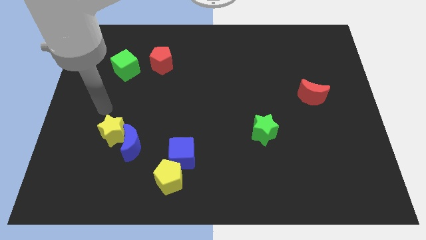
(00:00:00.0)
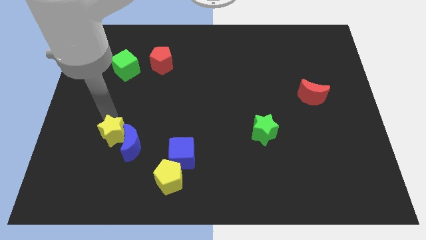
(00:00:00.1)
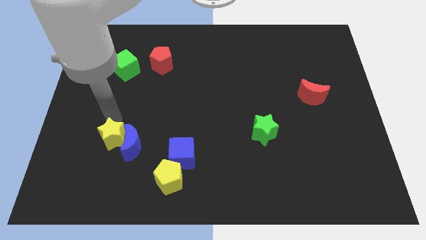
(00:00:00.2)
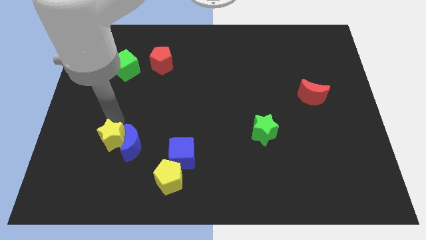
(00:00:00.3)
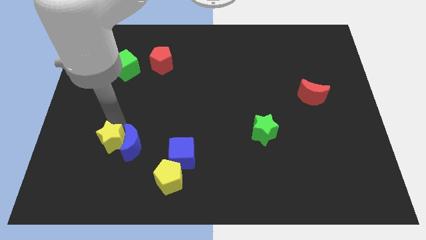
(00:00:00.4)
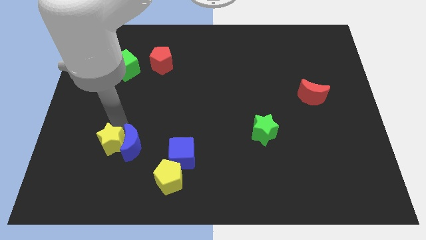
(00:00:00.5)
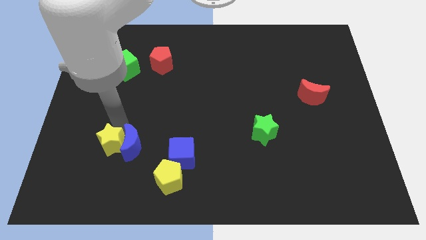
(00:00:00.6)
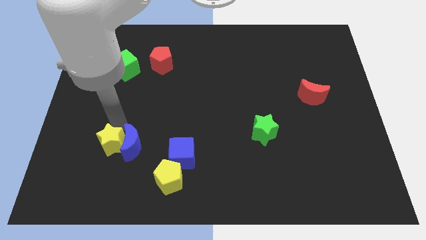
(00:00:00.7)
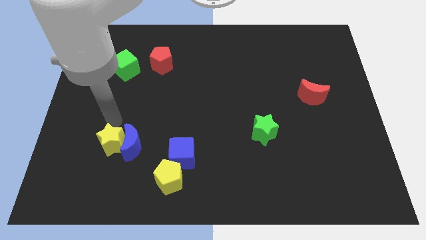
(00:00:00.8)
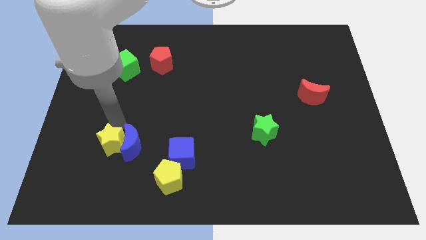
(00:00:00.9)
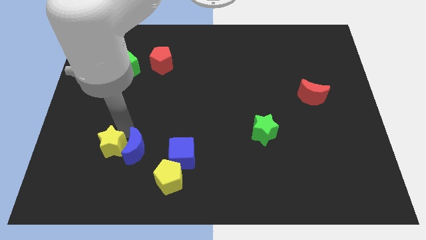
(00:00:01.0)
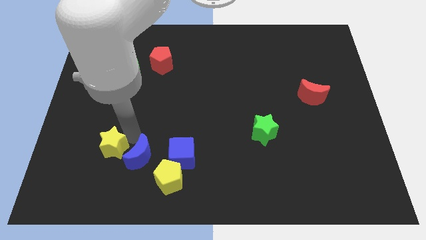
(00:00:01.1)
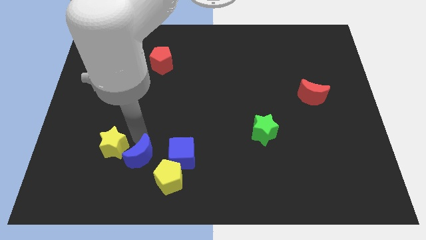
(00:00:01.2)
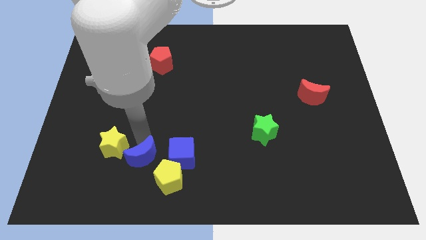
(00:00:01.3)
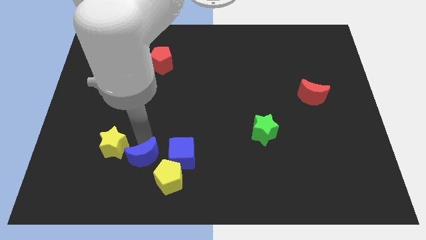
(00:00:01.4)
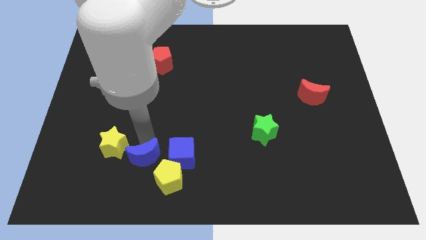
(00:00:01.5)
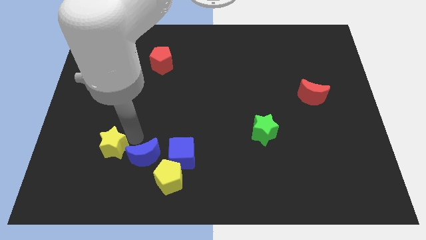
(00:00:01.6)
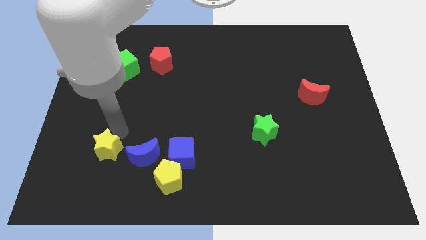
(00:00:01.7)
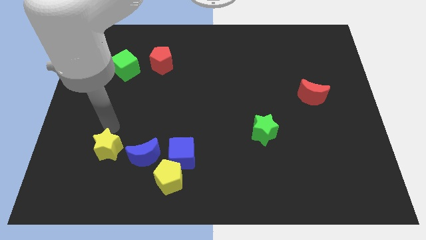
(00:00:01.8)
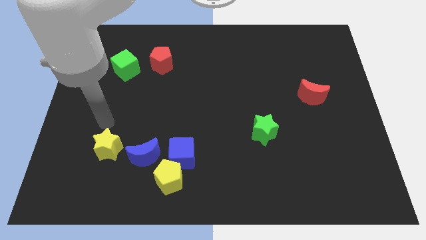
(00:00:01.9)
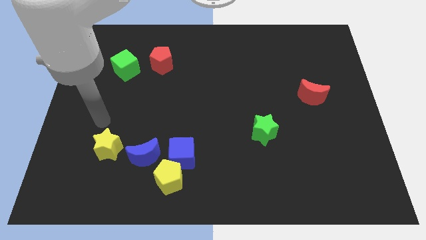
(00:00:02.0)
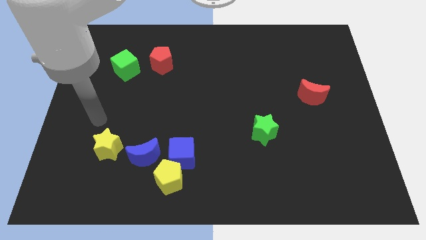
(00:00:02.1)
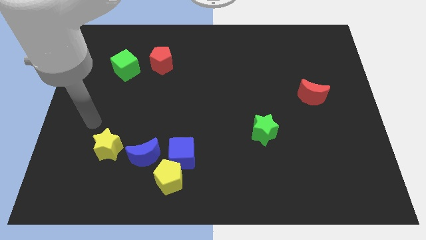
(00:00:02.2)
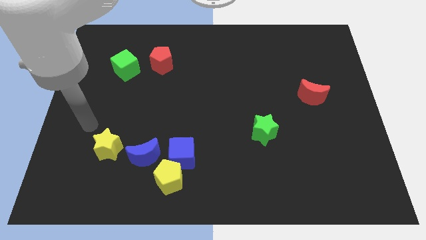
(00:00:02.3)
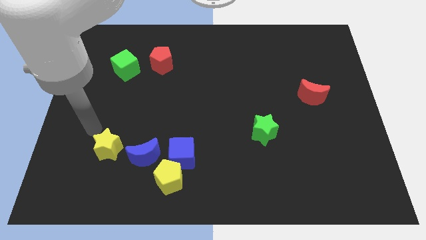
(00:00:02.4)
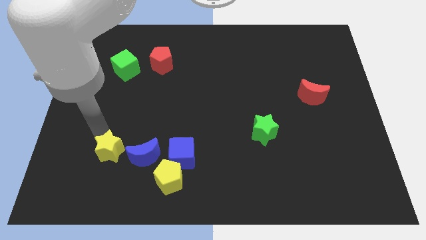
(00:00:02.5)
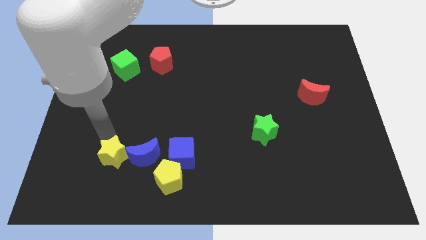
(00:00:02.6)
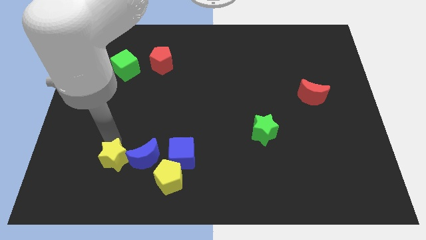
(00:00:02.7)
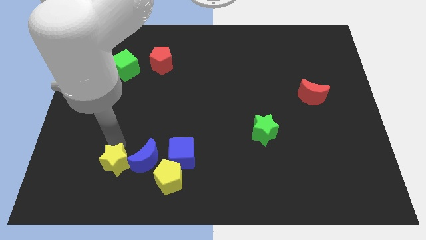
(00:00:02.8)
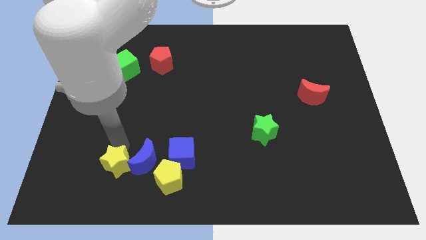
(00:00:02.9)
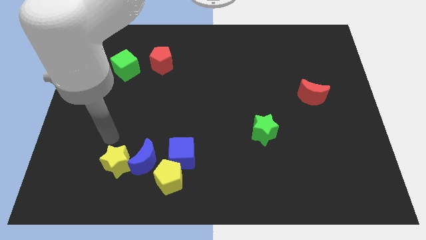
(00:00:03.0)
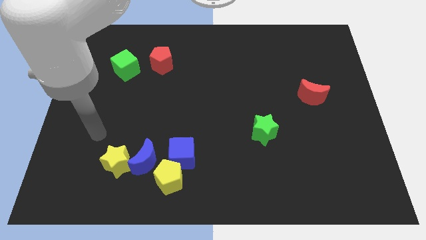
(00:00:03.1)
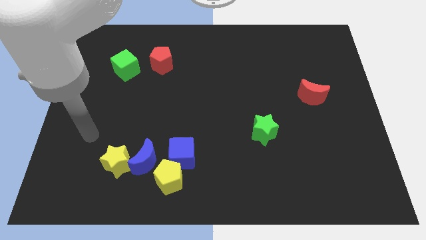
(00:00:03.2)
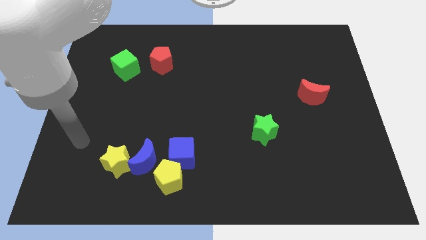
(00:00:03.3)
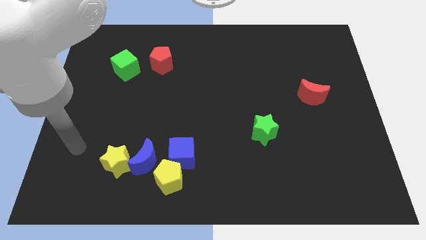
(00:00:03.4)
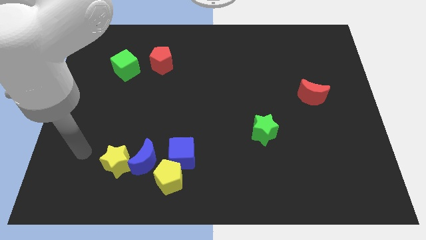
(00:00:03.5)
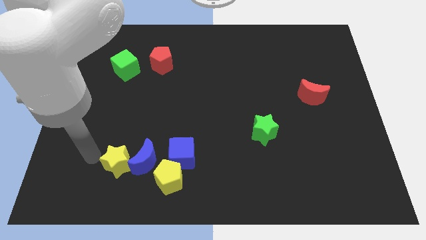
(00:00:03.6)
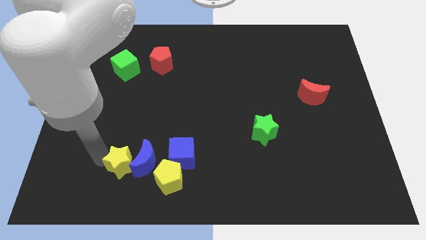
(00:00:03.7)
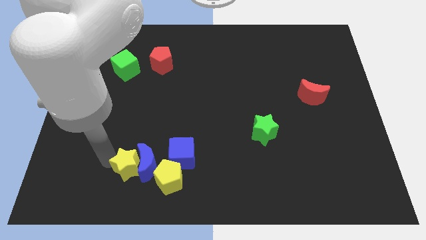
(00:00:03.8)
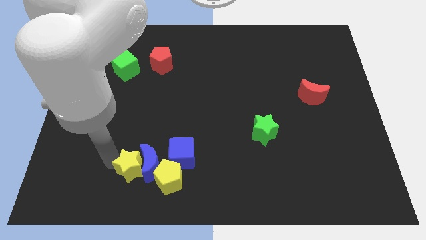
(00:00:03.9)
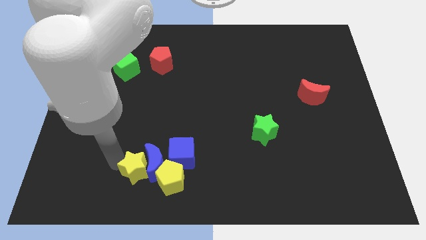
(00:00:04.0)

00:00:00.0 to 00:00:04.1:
push the yellow star blue moon into the group of blocks

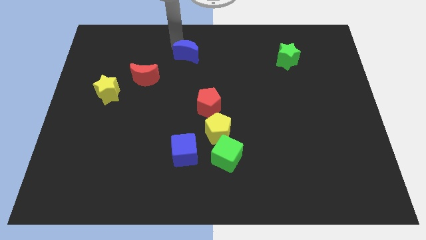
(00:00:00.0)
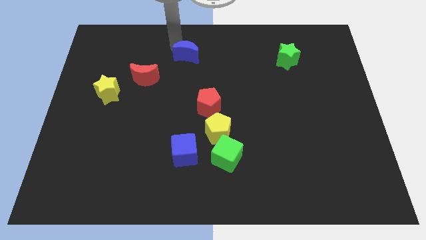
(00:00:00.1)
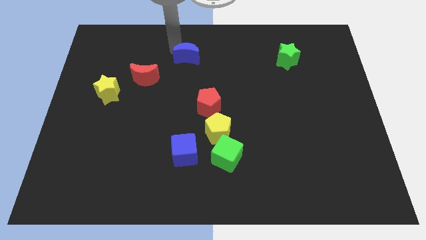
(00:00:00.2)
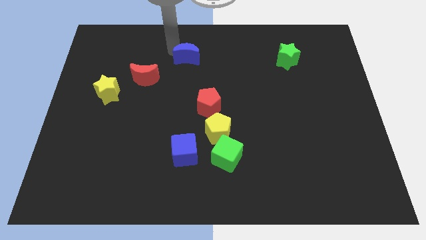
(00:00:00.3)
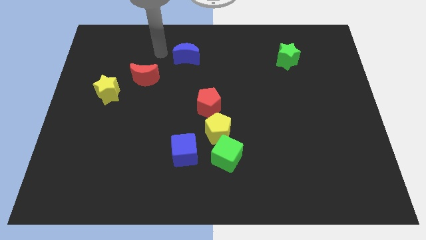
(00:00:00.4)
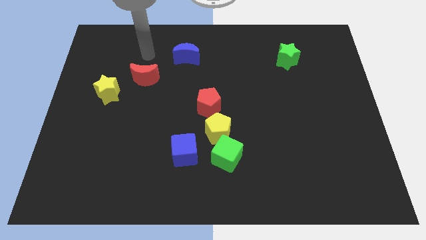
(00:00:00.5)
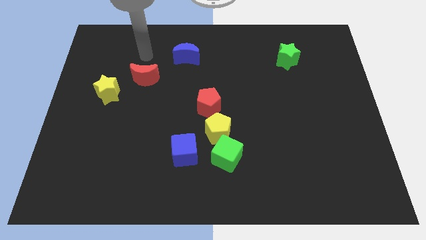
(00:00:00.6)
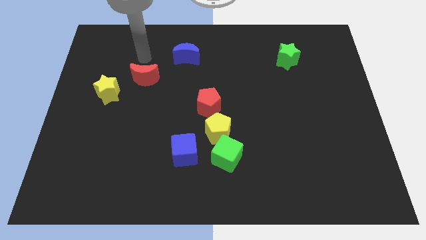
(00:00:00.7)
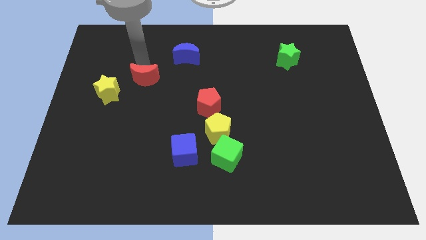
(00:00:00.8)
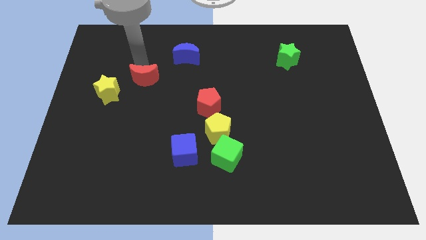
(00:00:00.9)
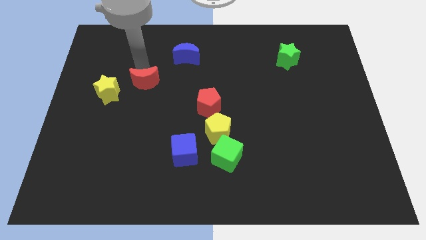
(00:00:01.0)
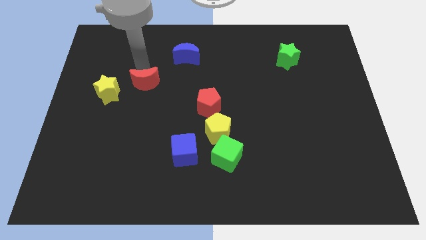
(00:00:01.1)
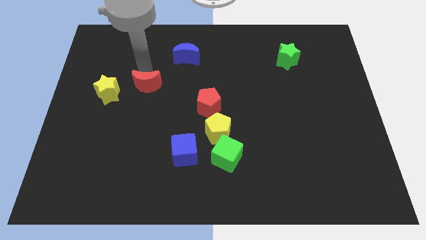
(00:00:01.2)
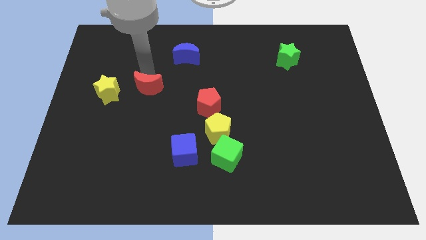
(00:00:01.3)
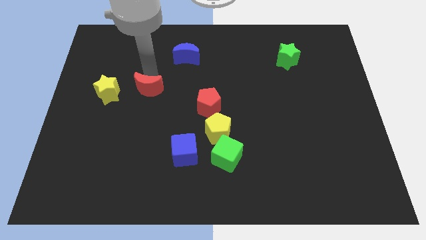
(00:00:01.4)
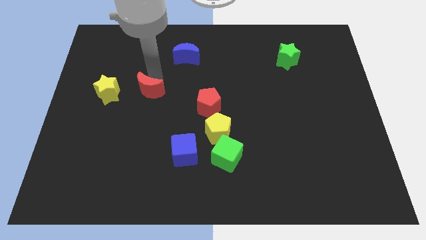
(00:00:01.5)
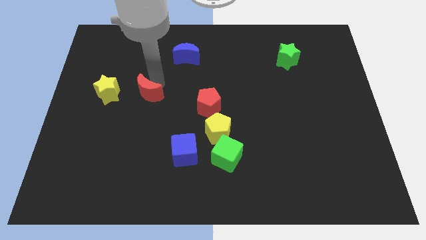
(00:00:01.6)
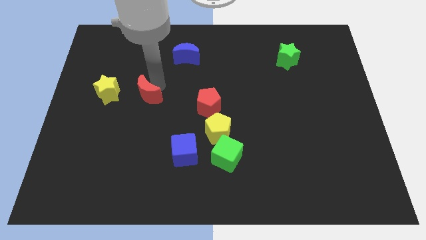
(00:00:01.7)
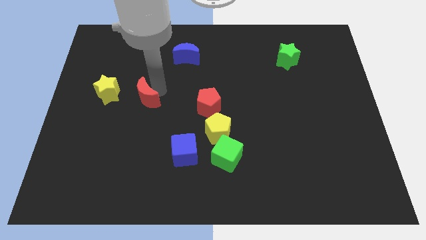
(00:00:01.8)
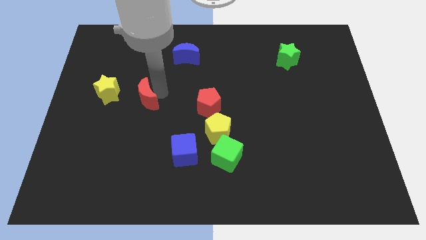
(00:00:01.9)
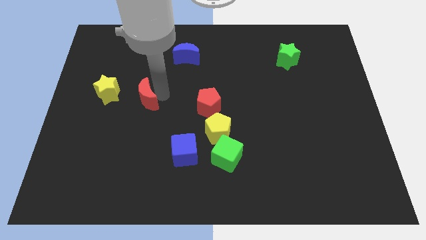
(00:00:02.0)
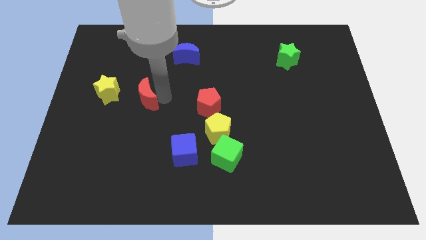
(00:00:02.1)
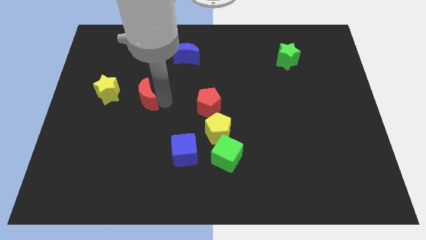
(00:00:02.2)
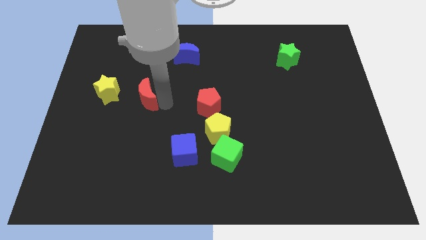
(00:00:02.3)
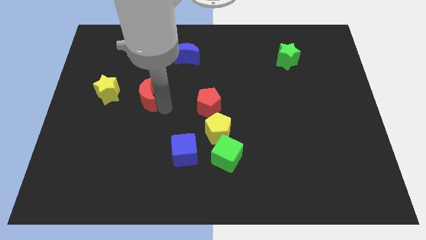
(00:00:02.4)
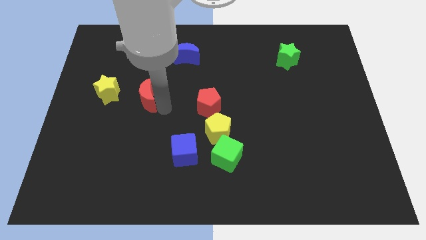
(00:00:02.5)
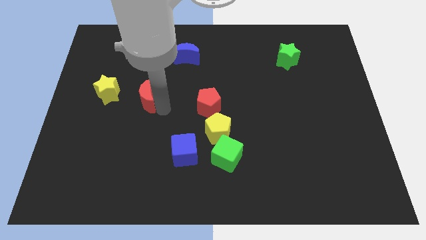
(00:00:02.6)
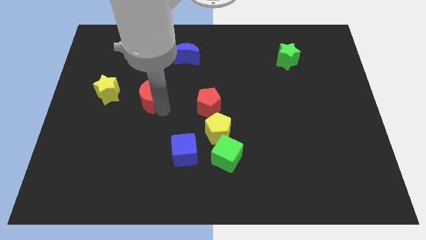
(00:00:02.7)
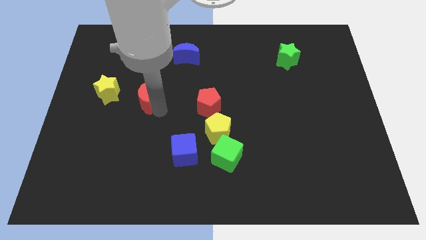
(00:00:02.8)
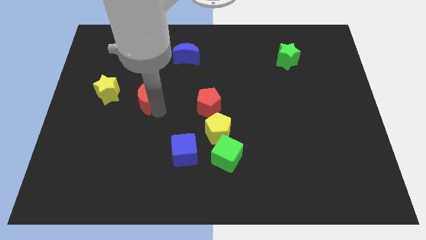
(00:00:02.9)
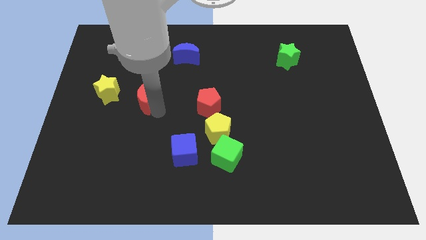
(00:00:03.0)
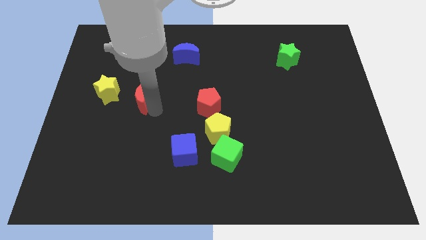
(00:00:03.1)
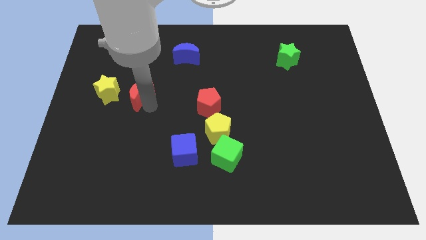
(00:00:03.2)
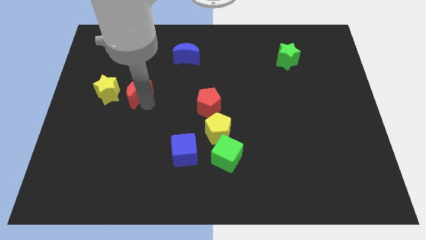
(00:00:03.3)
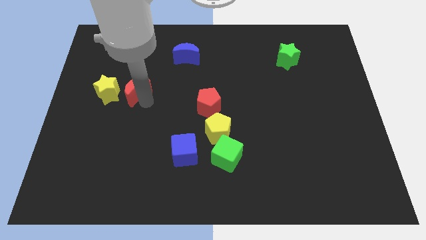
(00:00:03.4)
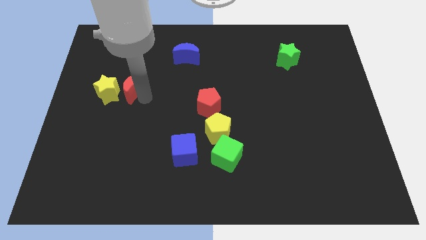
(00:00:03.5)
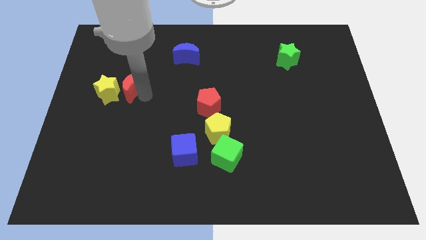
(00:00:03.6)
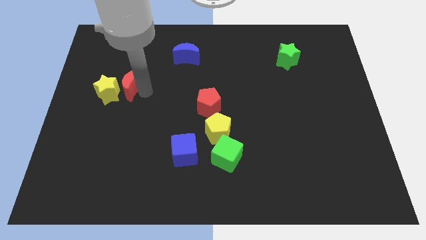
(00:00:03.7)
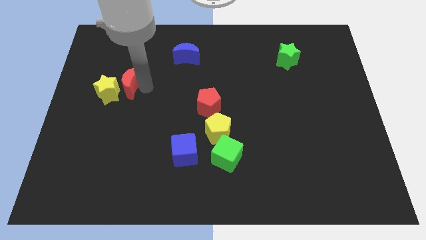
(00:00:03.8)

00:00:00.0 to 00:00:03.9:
move the red moon to the right of yellow star

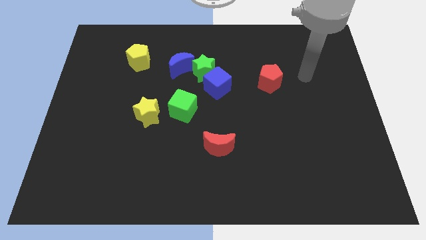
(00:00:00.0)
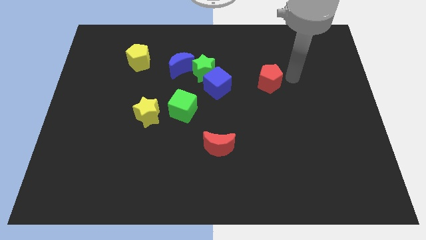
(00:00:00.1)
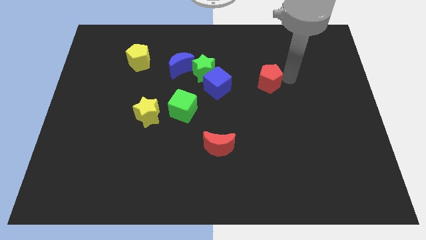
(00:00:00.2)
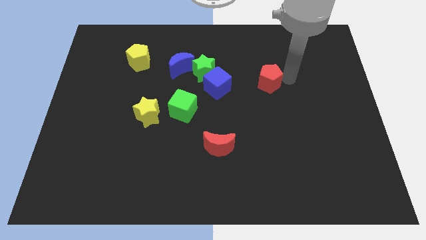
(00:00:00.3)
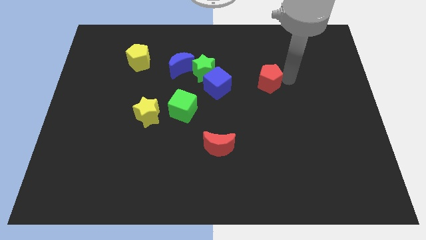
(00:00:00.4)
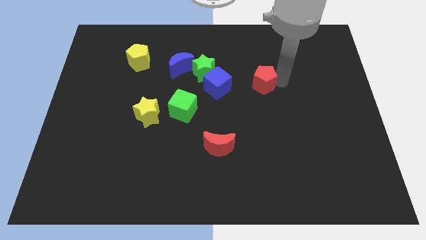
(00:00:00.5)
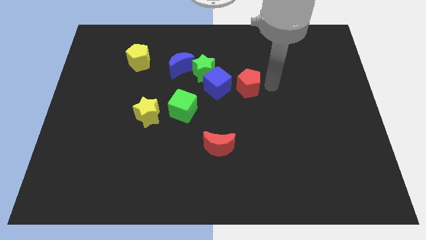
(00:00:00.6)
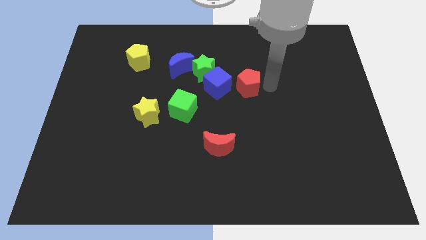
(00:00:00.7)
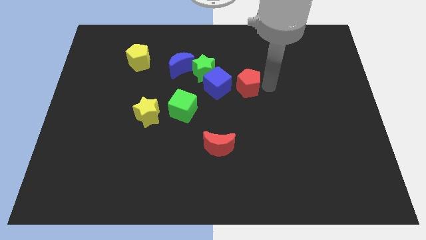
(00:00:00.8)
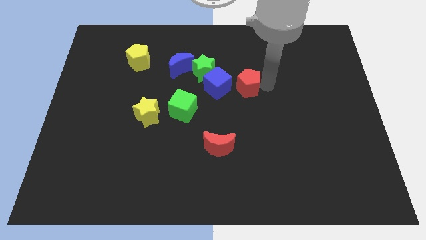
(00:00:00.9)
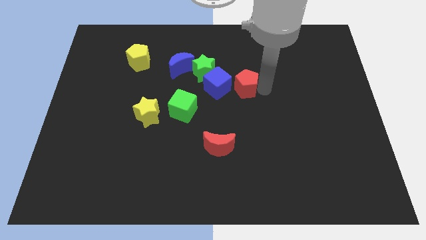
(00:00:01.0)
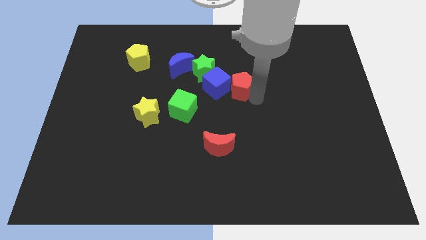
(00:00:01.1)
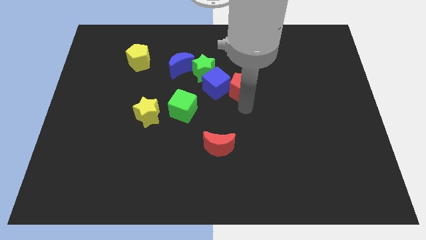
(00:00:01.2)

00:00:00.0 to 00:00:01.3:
push the red pentagon into the blue cube
